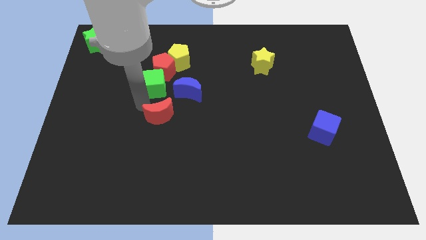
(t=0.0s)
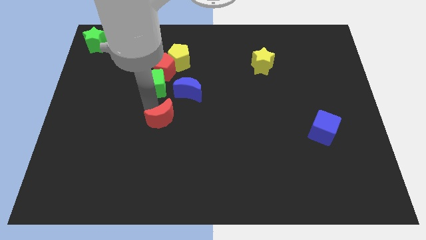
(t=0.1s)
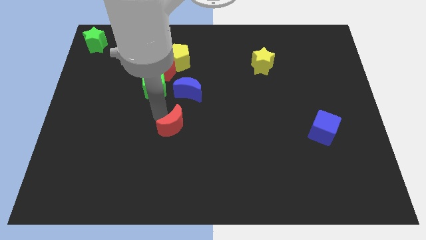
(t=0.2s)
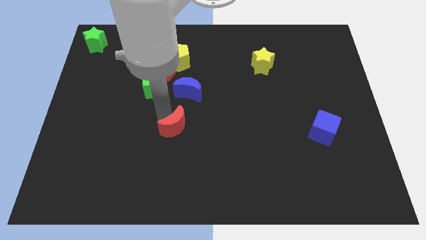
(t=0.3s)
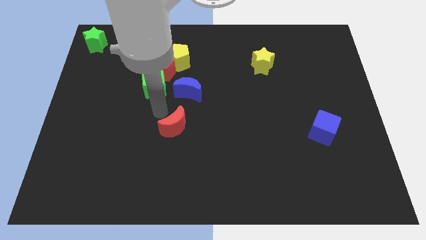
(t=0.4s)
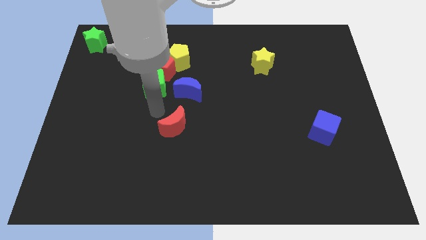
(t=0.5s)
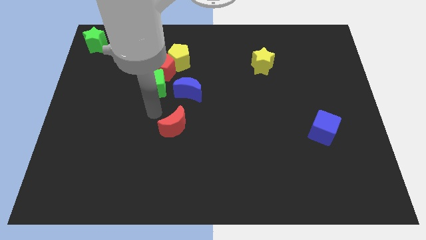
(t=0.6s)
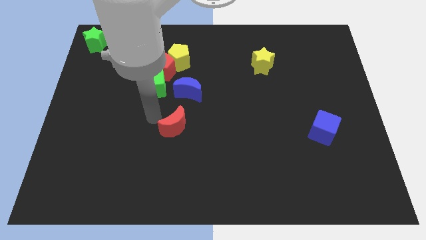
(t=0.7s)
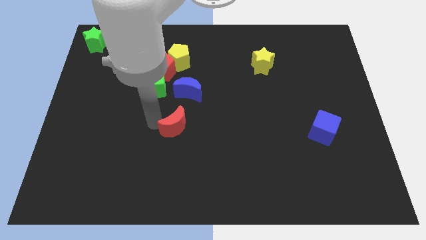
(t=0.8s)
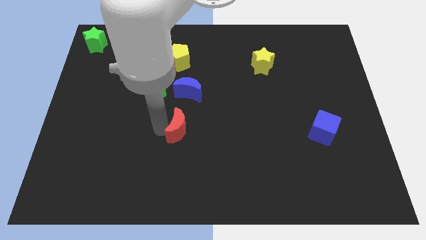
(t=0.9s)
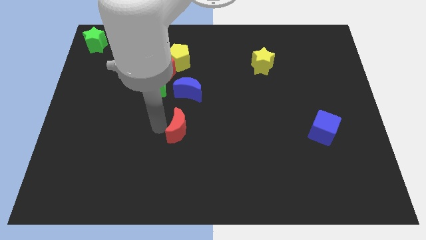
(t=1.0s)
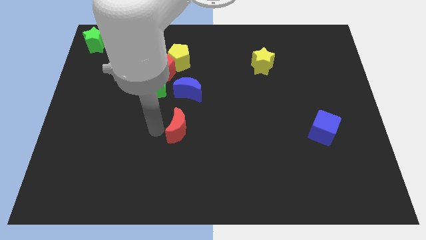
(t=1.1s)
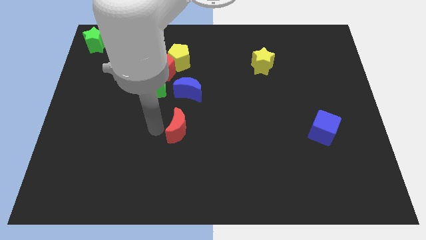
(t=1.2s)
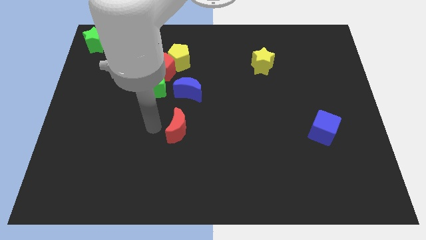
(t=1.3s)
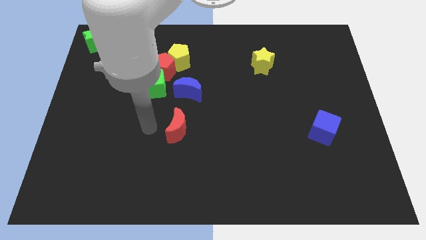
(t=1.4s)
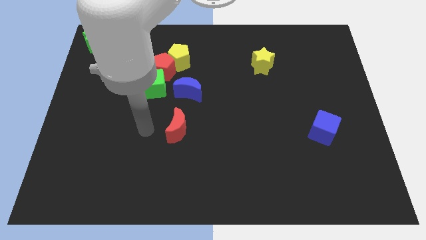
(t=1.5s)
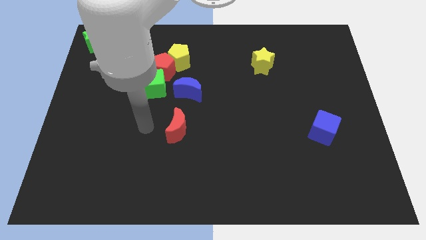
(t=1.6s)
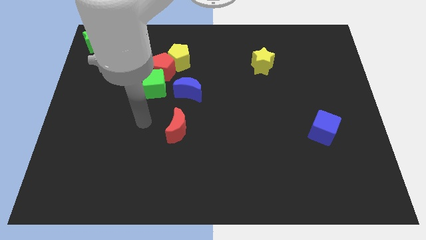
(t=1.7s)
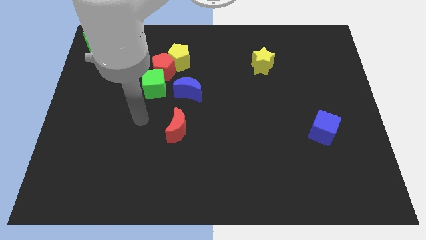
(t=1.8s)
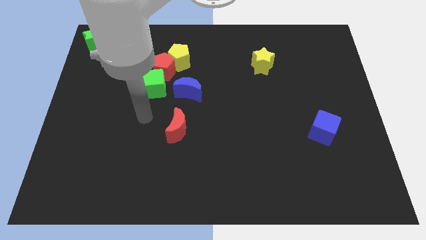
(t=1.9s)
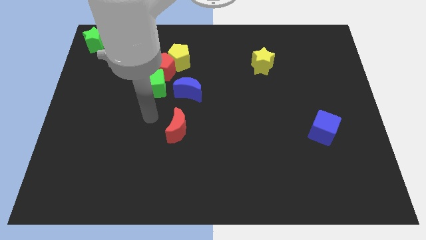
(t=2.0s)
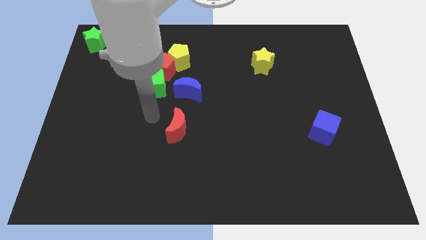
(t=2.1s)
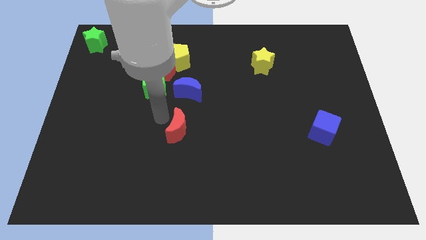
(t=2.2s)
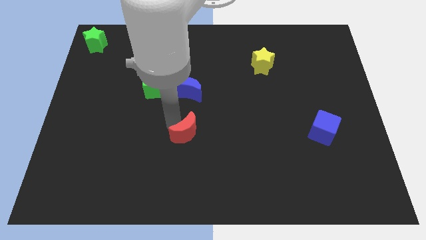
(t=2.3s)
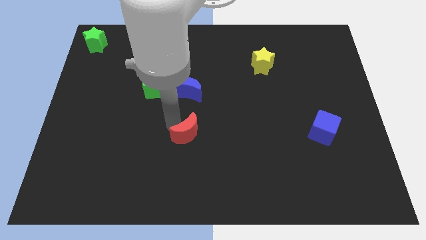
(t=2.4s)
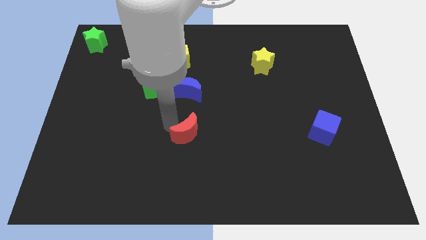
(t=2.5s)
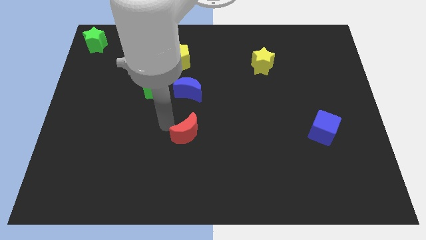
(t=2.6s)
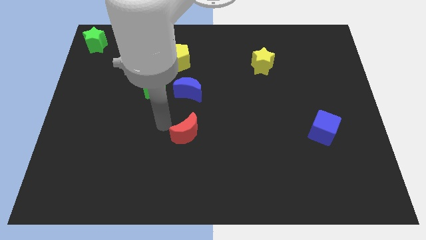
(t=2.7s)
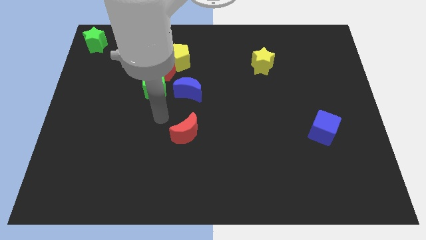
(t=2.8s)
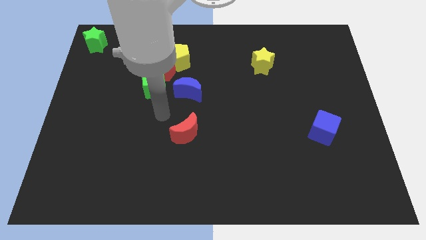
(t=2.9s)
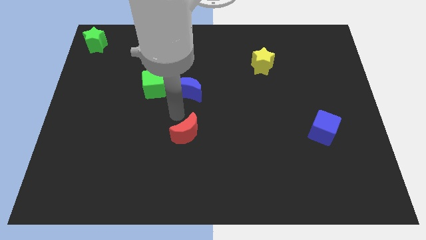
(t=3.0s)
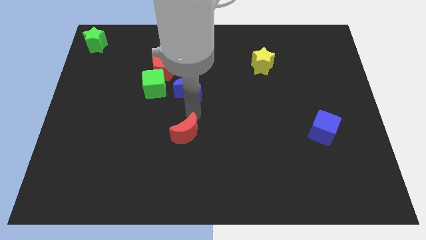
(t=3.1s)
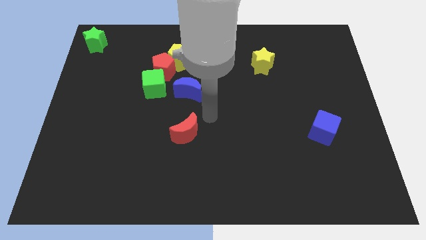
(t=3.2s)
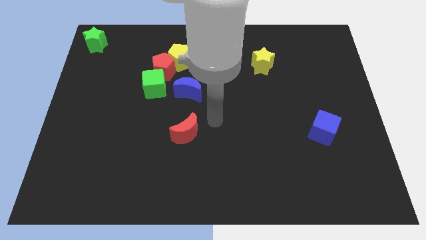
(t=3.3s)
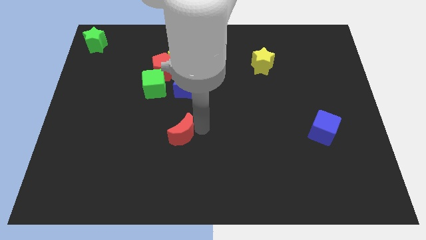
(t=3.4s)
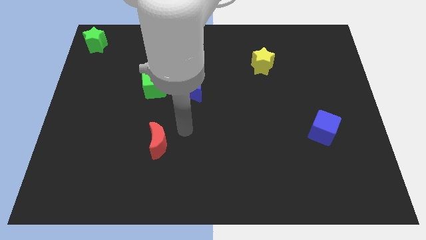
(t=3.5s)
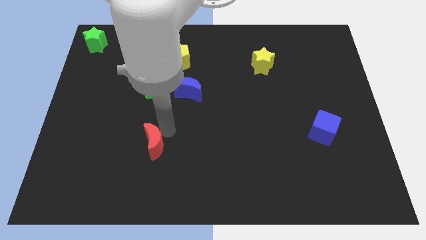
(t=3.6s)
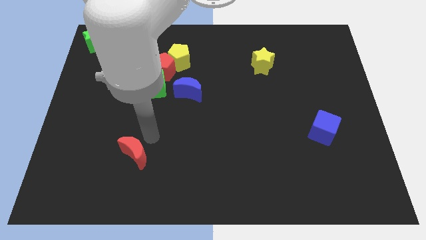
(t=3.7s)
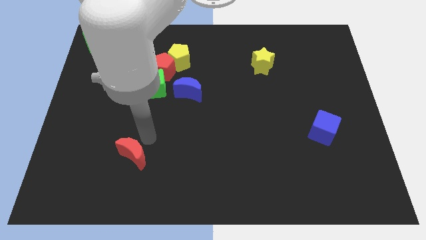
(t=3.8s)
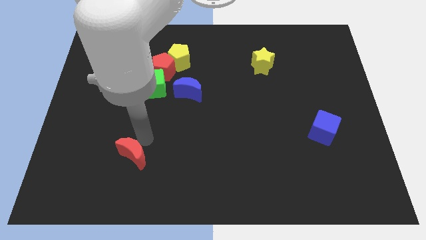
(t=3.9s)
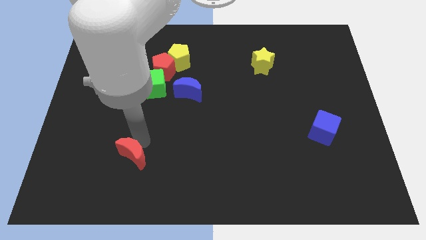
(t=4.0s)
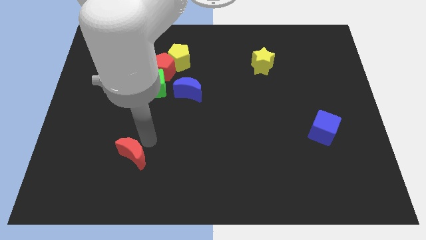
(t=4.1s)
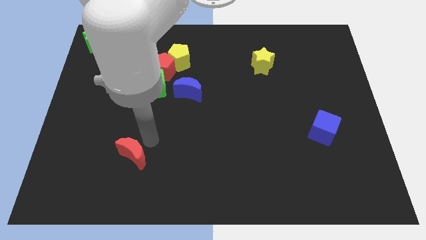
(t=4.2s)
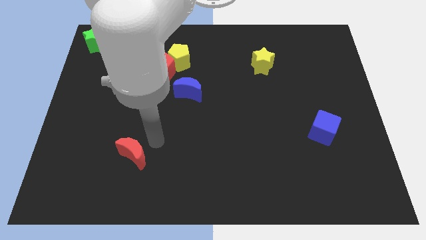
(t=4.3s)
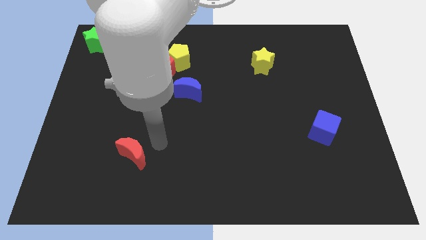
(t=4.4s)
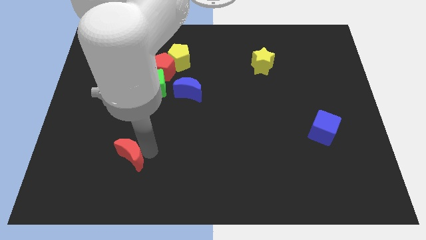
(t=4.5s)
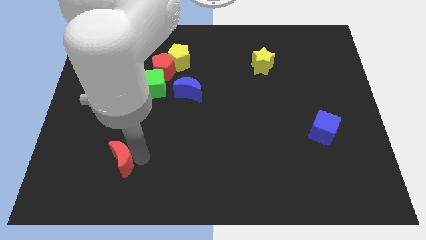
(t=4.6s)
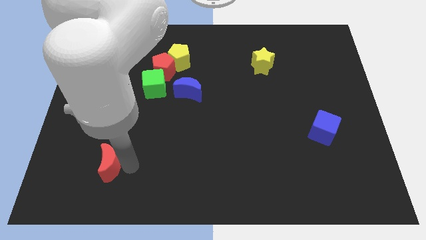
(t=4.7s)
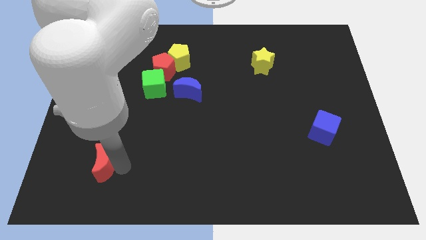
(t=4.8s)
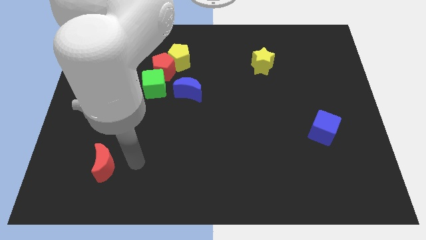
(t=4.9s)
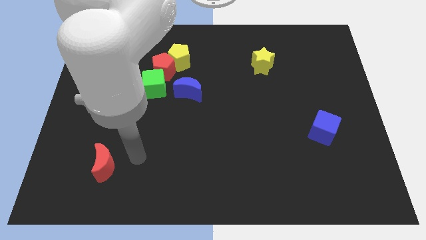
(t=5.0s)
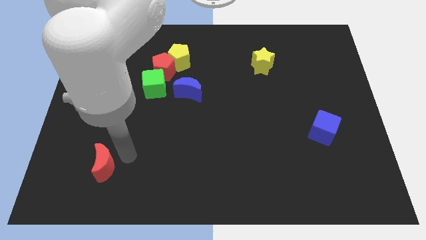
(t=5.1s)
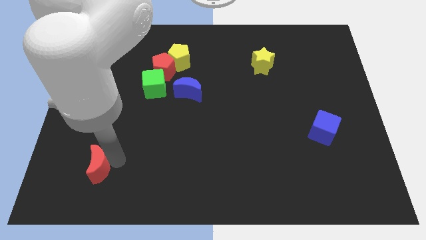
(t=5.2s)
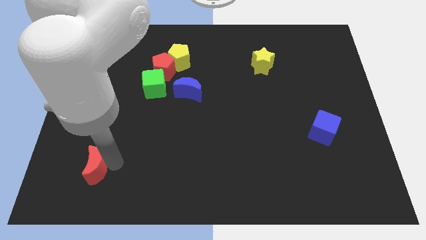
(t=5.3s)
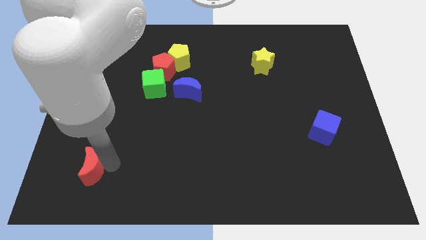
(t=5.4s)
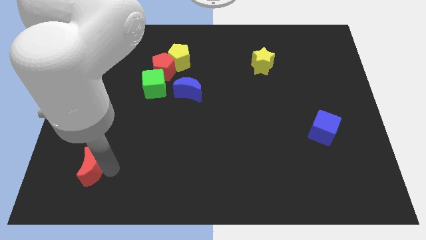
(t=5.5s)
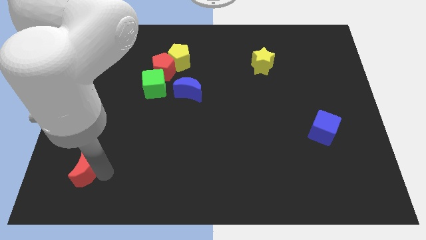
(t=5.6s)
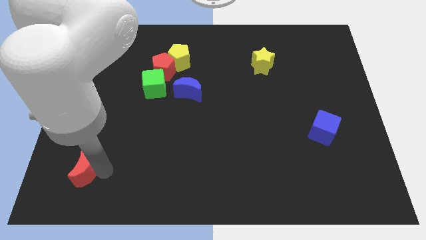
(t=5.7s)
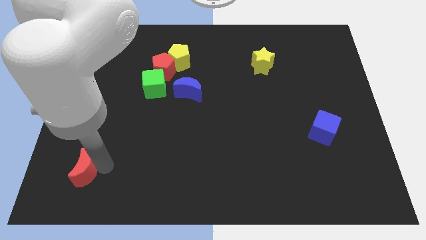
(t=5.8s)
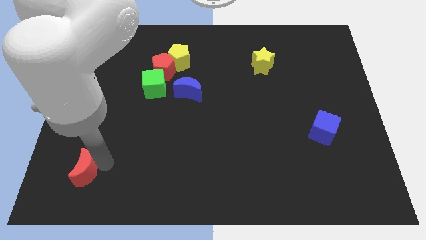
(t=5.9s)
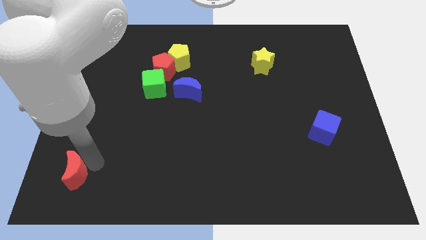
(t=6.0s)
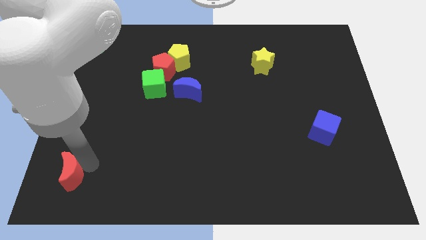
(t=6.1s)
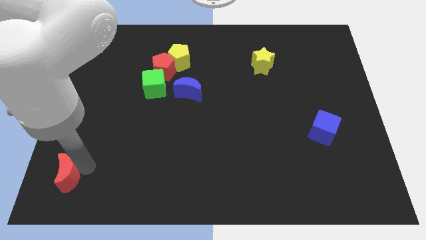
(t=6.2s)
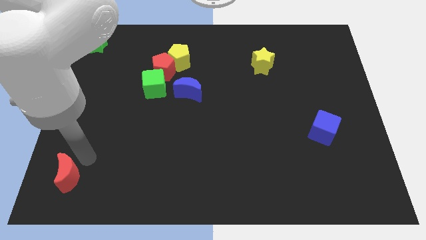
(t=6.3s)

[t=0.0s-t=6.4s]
push the red crescent left bottom of the board

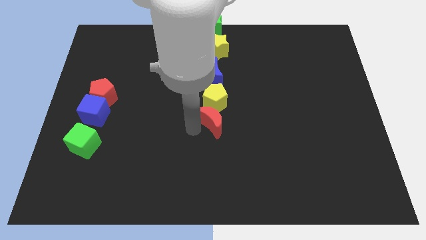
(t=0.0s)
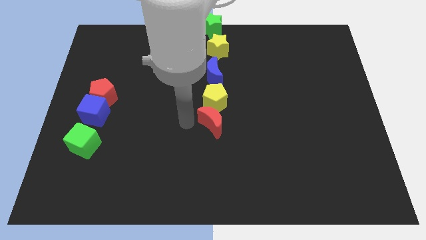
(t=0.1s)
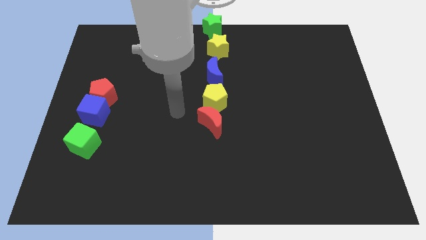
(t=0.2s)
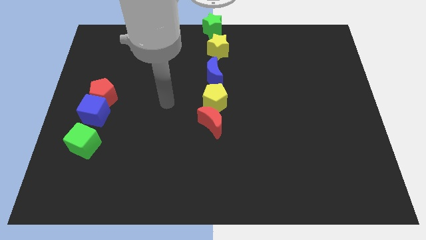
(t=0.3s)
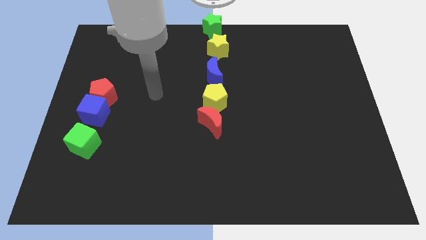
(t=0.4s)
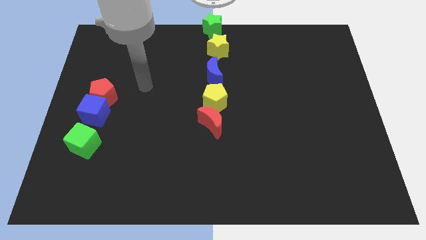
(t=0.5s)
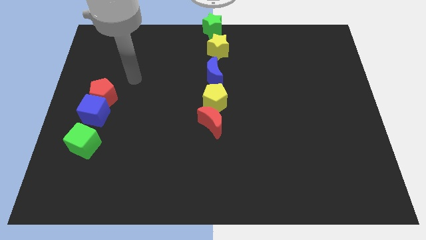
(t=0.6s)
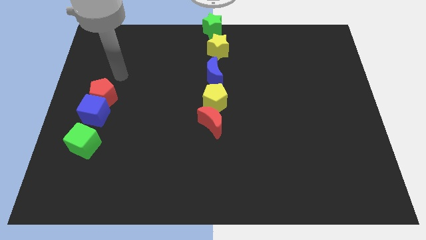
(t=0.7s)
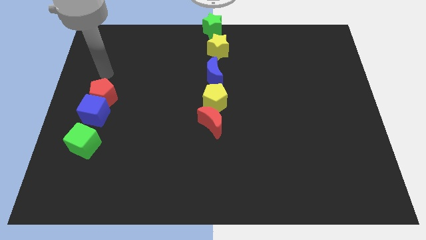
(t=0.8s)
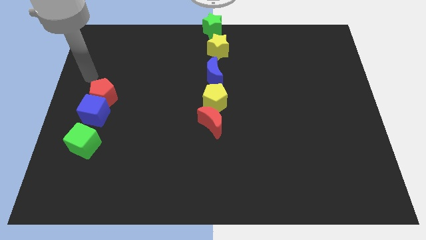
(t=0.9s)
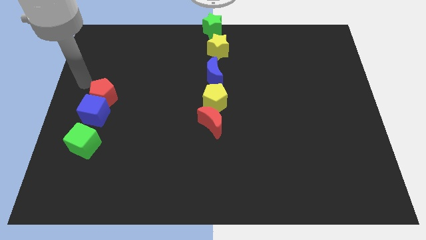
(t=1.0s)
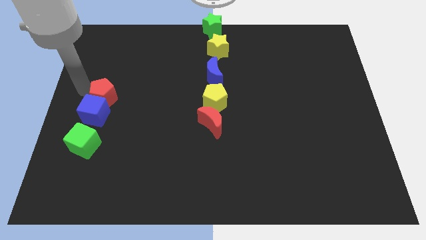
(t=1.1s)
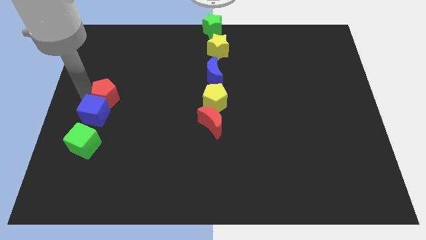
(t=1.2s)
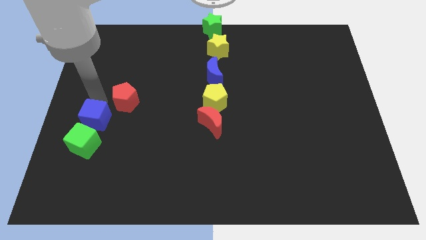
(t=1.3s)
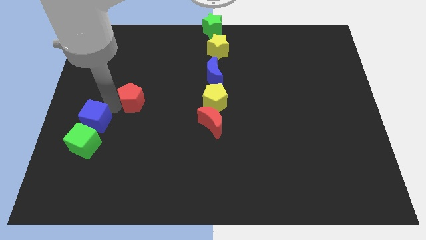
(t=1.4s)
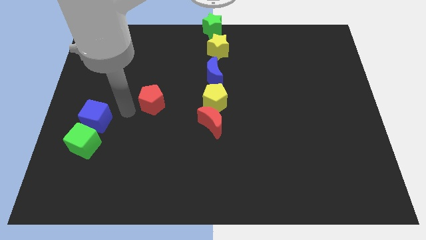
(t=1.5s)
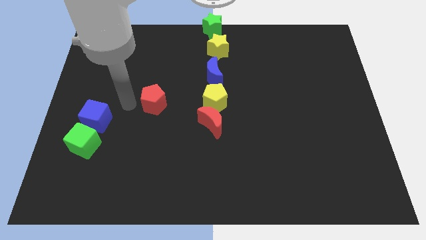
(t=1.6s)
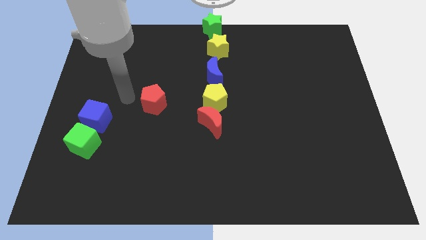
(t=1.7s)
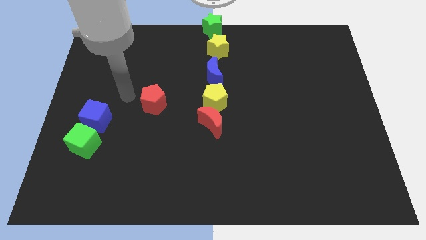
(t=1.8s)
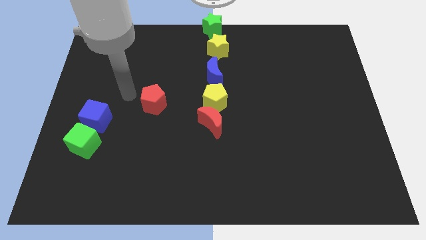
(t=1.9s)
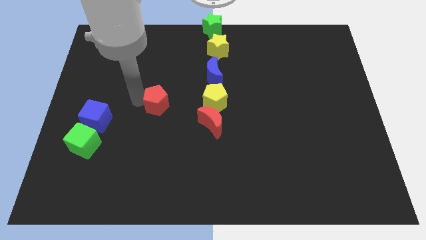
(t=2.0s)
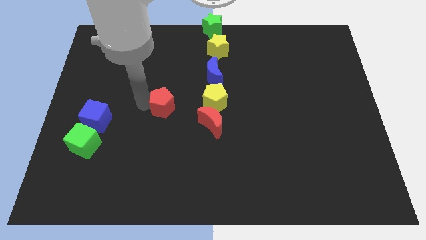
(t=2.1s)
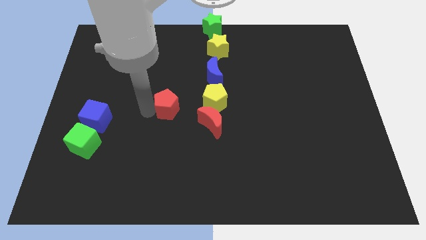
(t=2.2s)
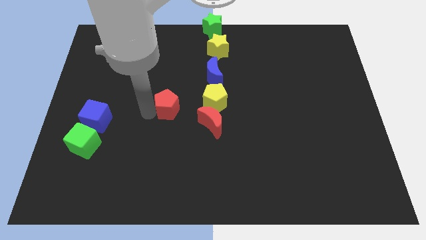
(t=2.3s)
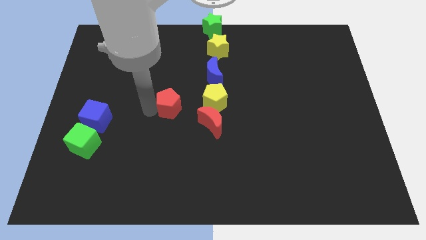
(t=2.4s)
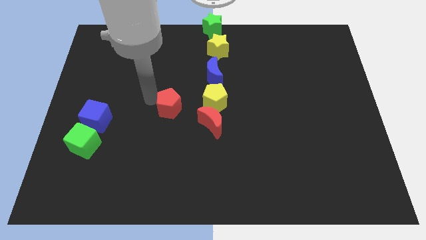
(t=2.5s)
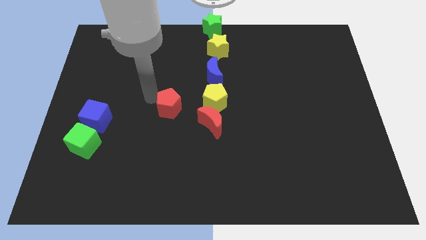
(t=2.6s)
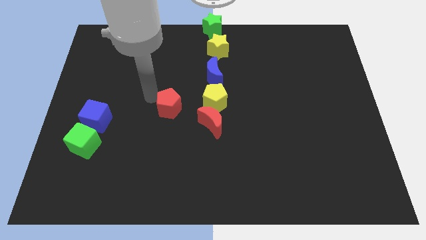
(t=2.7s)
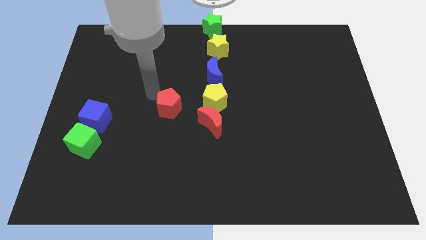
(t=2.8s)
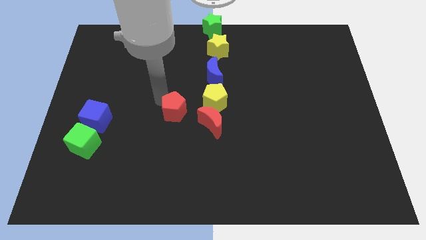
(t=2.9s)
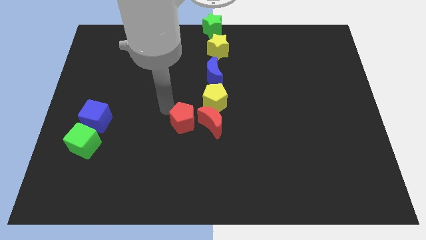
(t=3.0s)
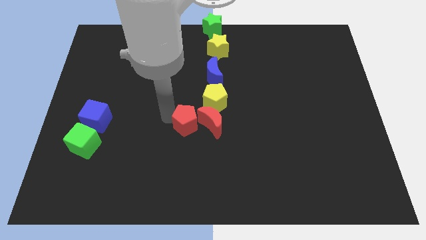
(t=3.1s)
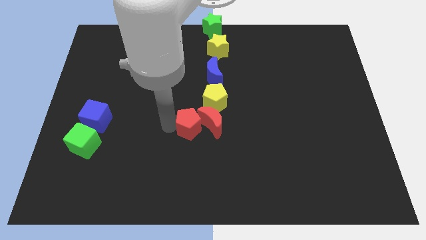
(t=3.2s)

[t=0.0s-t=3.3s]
put the red pentagon to the left side of red moon
